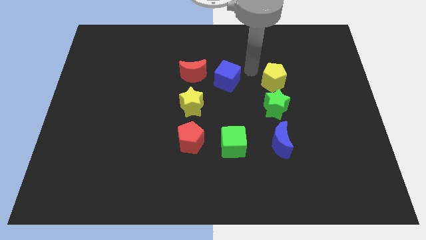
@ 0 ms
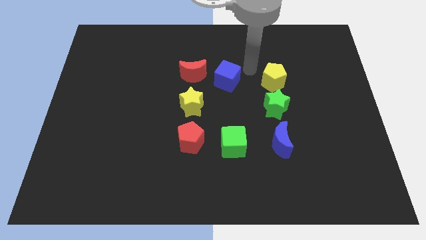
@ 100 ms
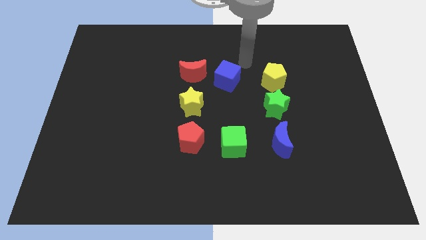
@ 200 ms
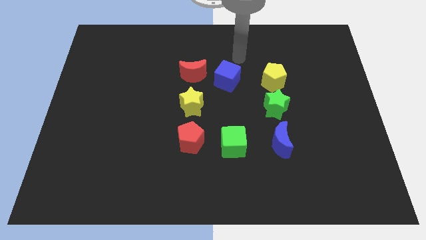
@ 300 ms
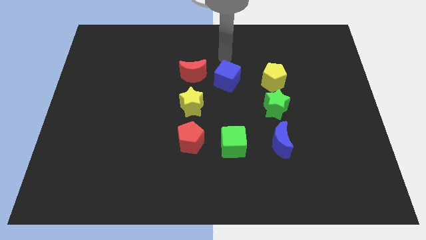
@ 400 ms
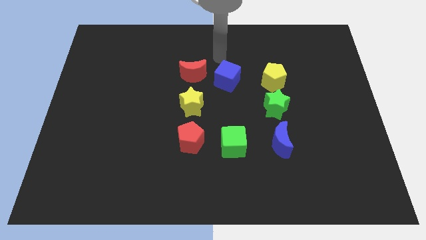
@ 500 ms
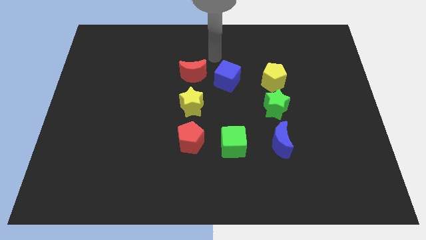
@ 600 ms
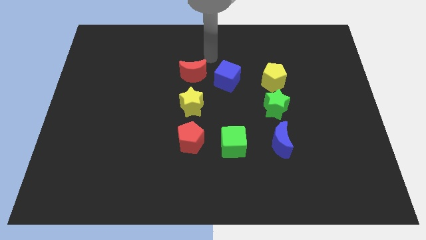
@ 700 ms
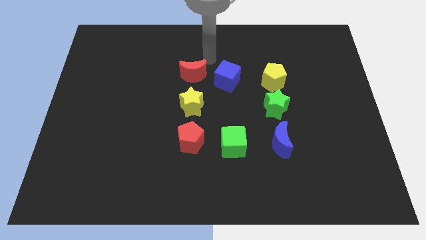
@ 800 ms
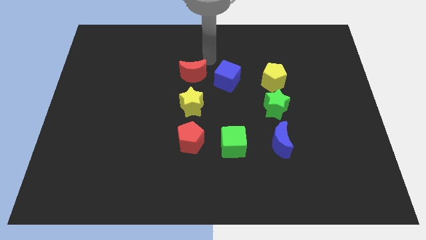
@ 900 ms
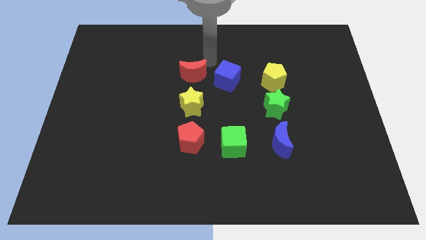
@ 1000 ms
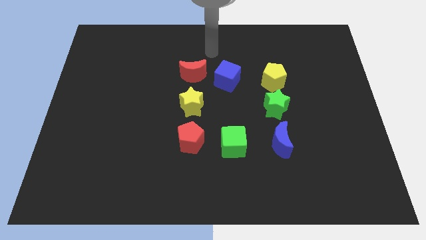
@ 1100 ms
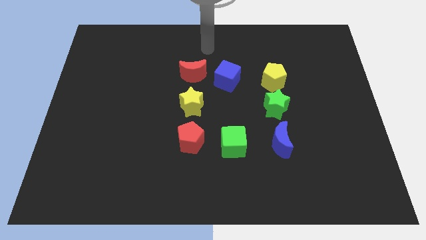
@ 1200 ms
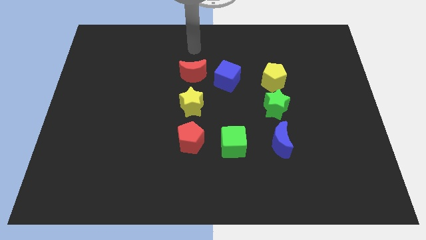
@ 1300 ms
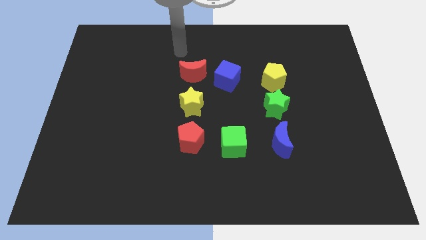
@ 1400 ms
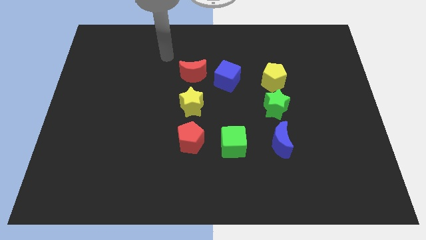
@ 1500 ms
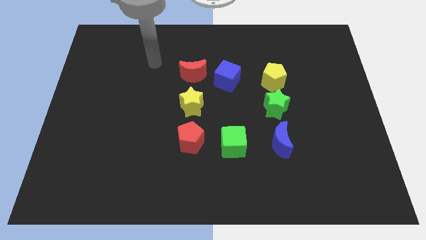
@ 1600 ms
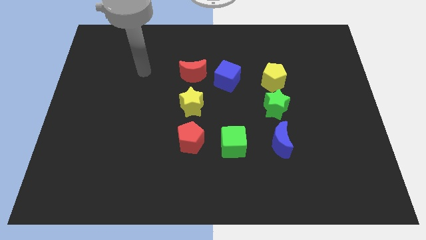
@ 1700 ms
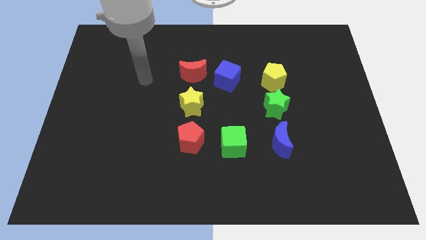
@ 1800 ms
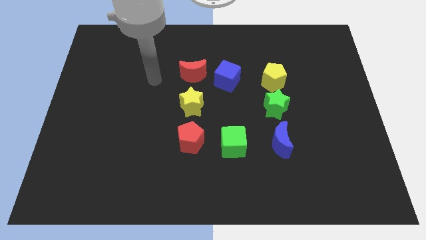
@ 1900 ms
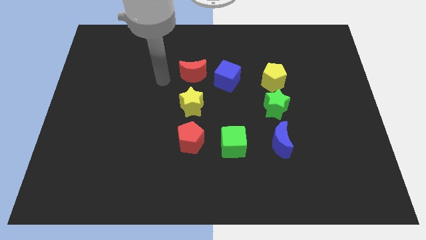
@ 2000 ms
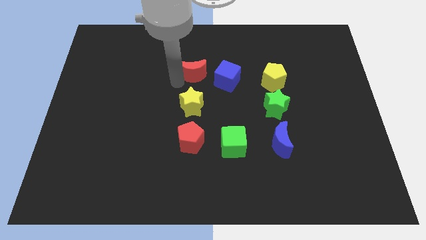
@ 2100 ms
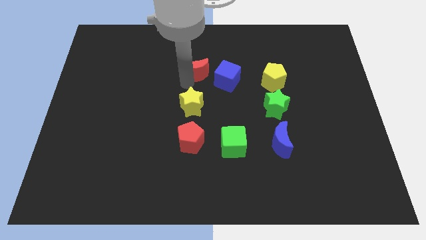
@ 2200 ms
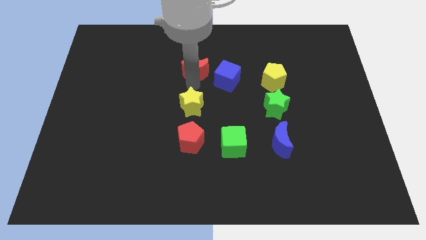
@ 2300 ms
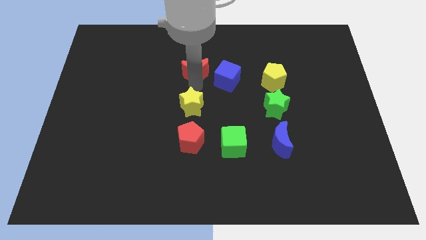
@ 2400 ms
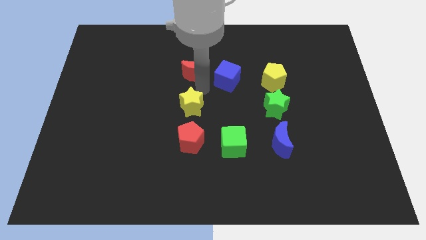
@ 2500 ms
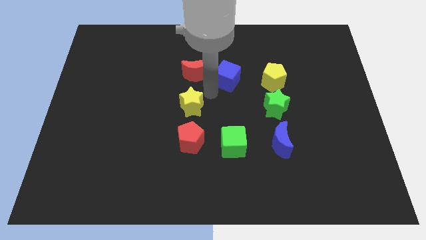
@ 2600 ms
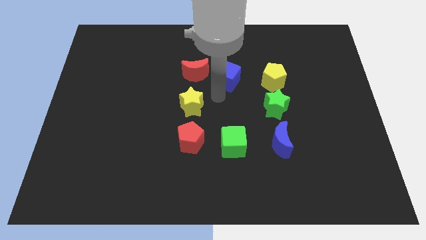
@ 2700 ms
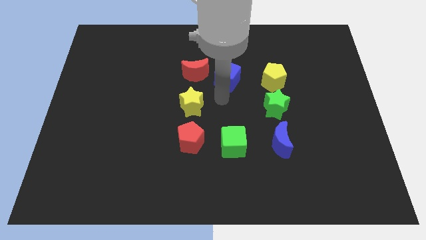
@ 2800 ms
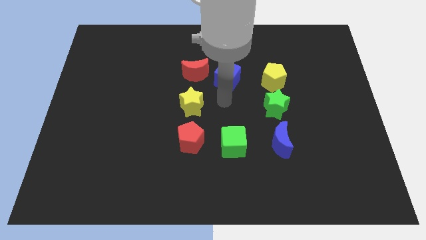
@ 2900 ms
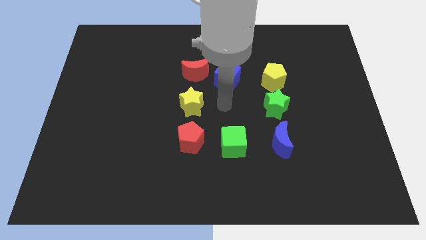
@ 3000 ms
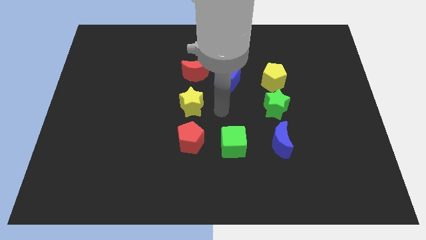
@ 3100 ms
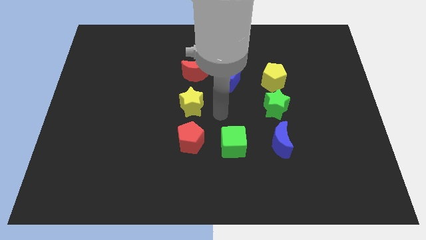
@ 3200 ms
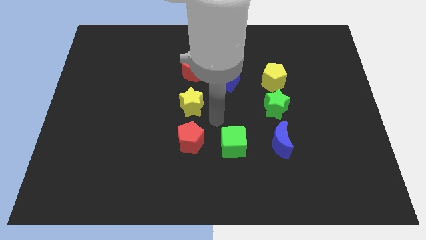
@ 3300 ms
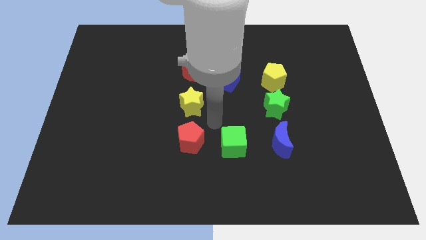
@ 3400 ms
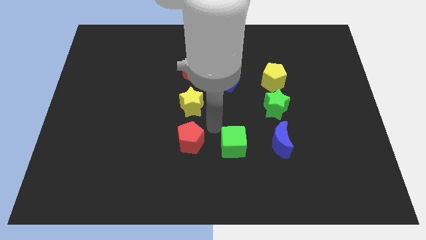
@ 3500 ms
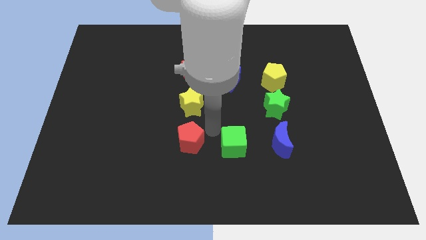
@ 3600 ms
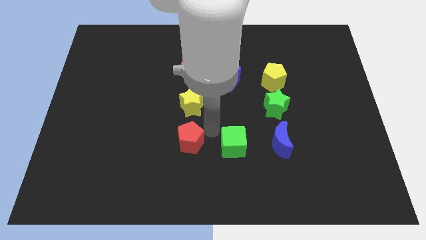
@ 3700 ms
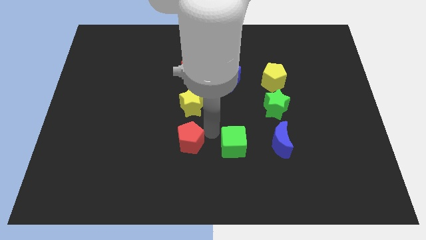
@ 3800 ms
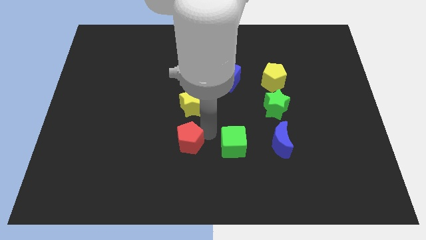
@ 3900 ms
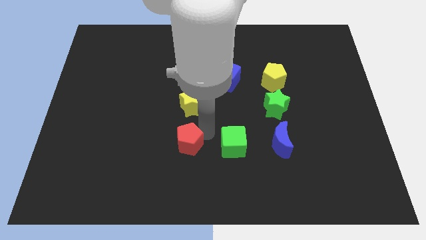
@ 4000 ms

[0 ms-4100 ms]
tap the top right side of the red pentagon

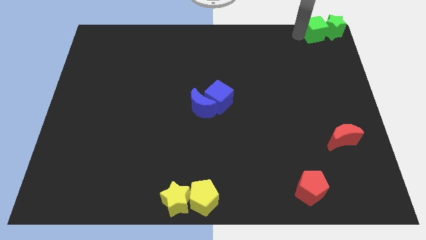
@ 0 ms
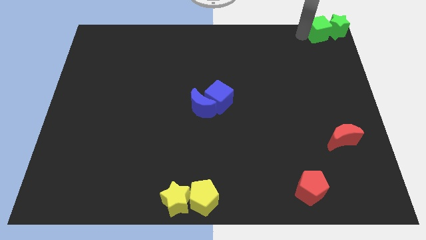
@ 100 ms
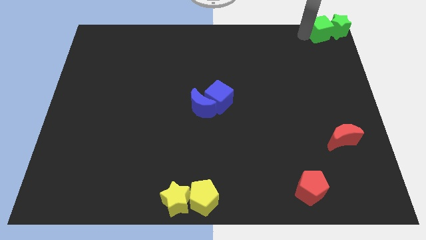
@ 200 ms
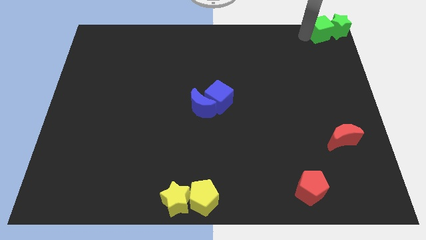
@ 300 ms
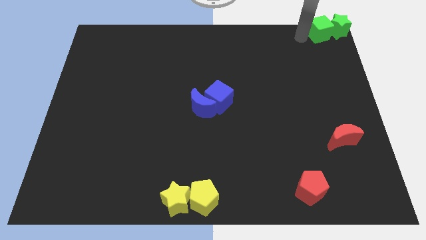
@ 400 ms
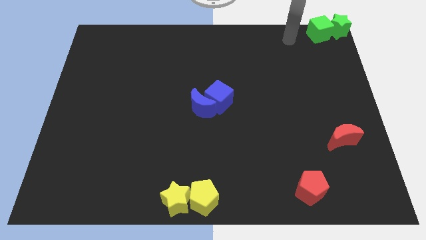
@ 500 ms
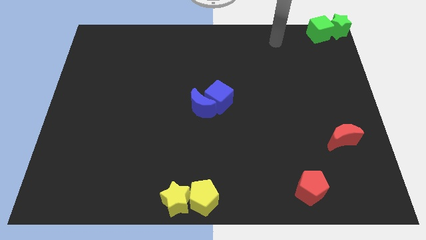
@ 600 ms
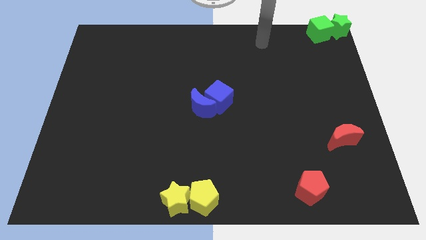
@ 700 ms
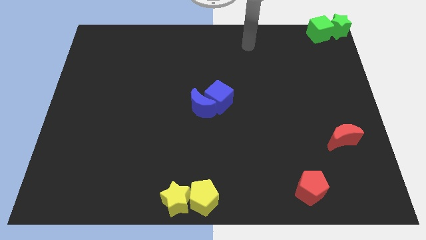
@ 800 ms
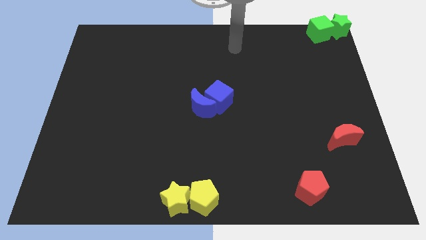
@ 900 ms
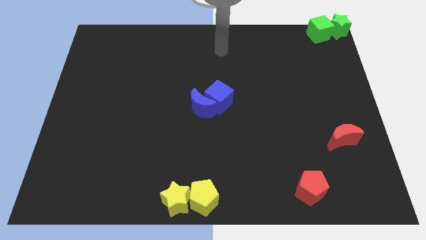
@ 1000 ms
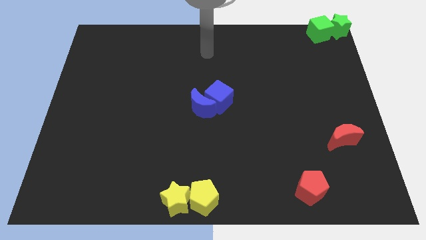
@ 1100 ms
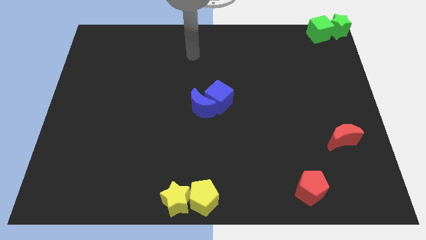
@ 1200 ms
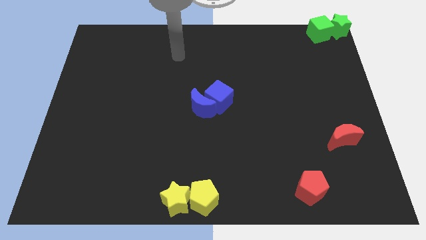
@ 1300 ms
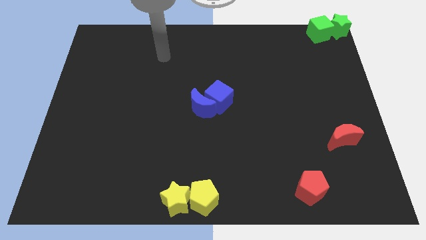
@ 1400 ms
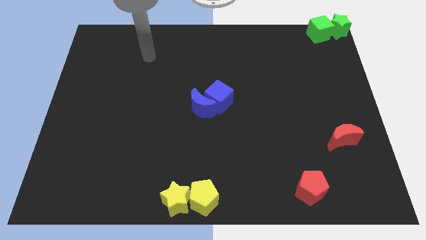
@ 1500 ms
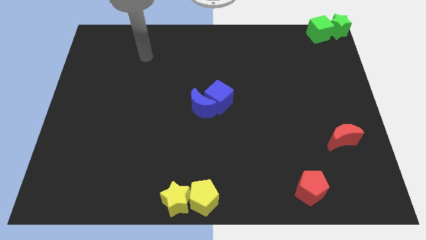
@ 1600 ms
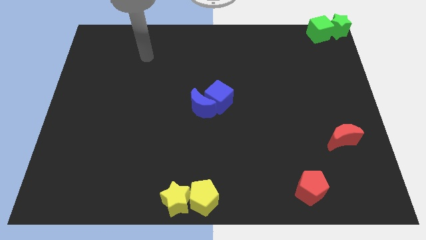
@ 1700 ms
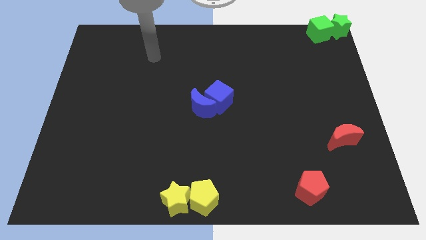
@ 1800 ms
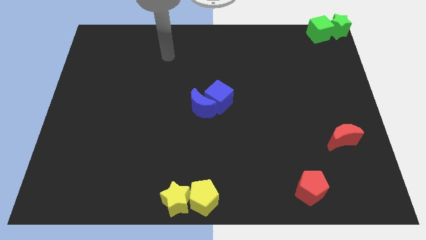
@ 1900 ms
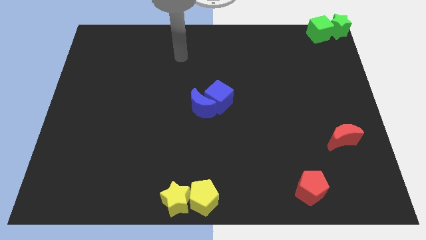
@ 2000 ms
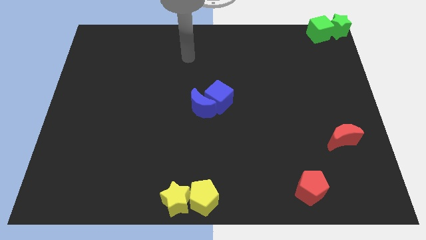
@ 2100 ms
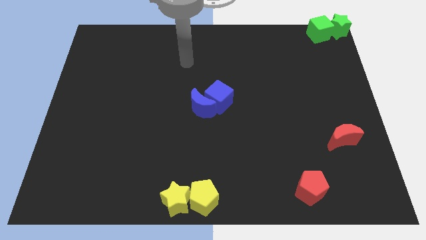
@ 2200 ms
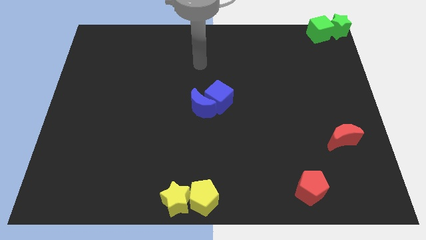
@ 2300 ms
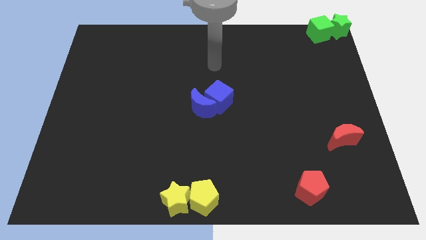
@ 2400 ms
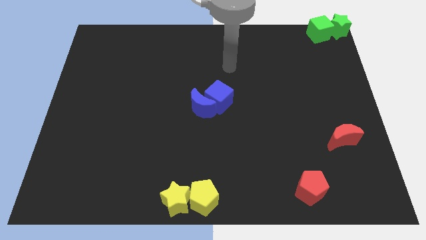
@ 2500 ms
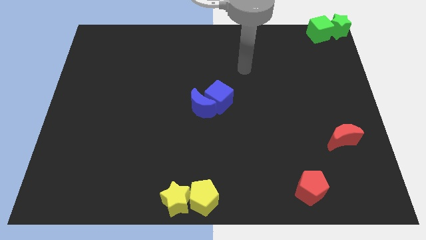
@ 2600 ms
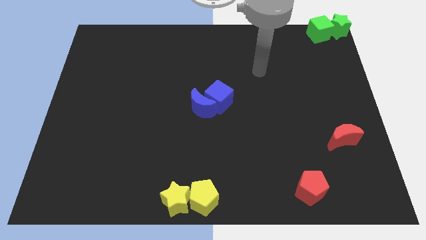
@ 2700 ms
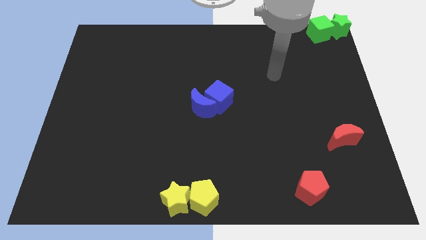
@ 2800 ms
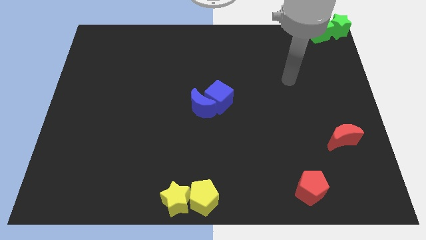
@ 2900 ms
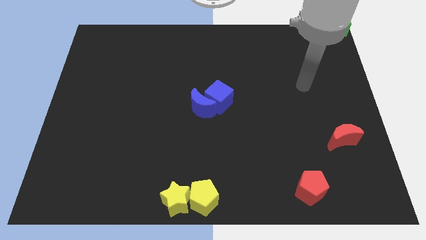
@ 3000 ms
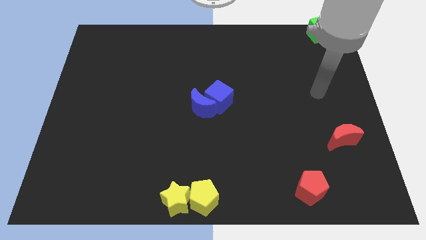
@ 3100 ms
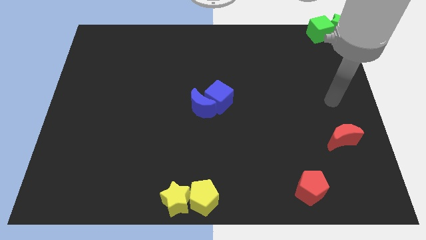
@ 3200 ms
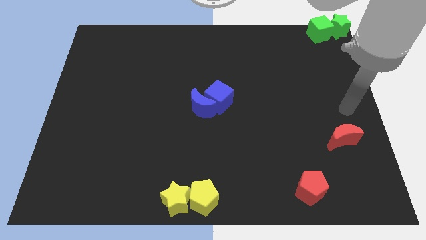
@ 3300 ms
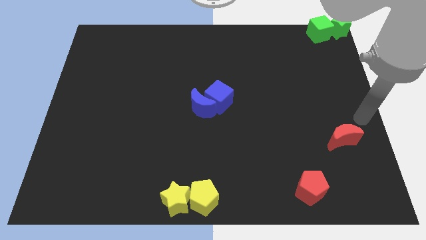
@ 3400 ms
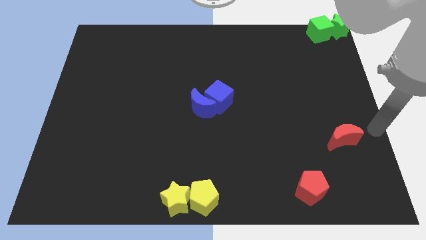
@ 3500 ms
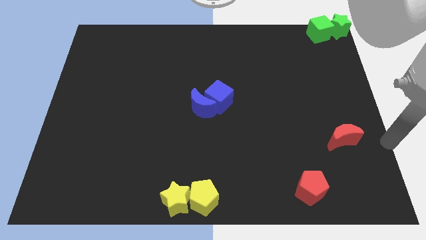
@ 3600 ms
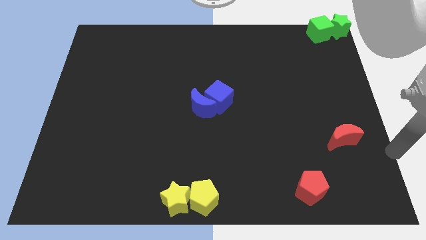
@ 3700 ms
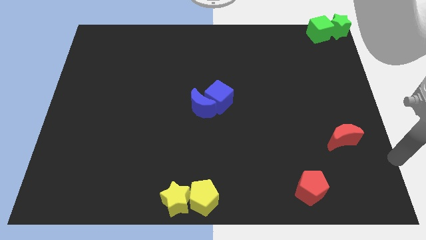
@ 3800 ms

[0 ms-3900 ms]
move the arm right to the red crescent

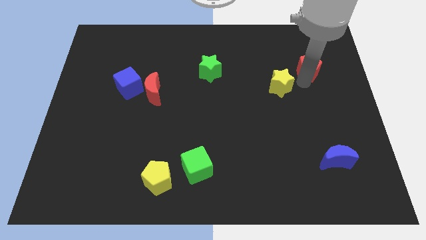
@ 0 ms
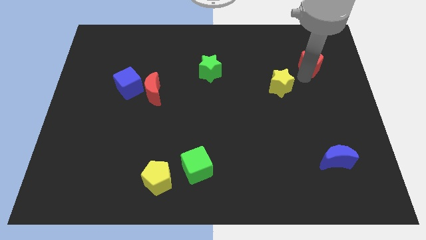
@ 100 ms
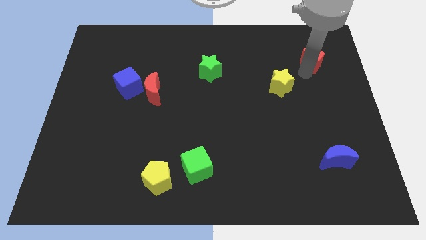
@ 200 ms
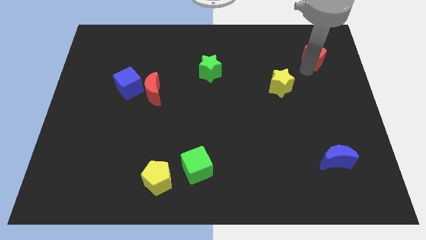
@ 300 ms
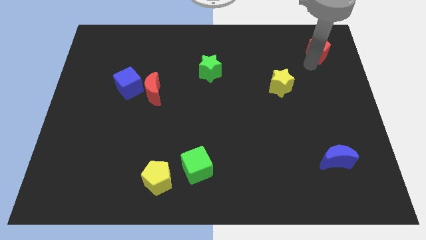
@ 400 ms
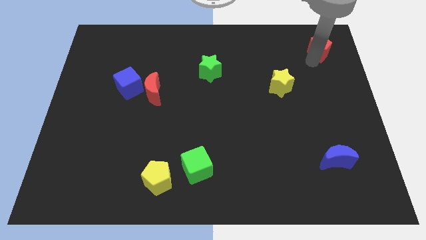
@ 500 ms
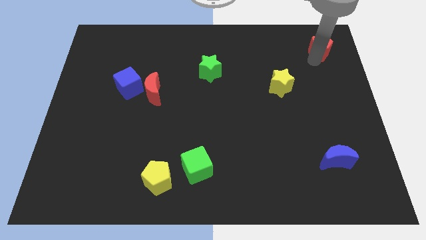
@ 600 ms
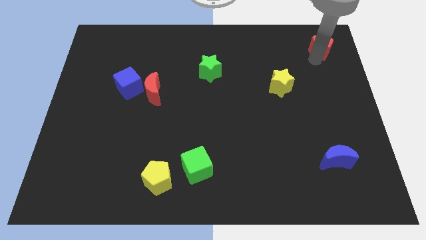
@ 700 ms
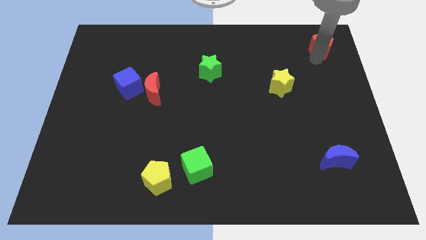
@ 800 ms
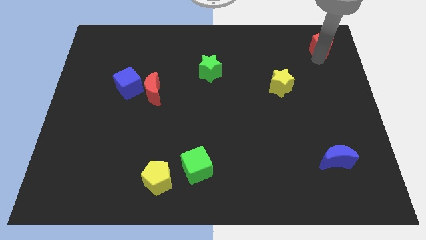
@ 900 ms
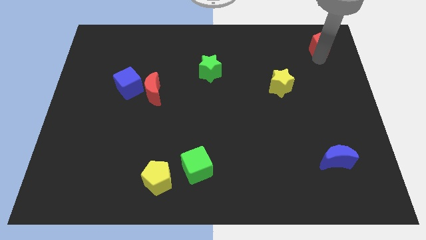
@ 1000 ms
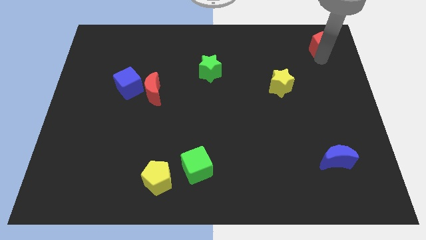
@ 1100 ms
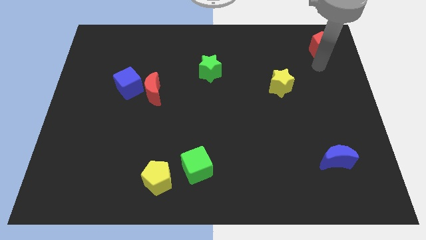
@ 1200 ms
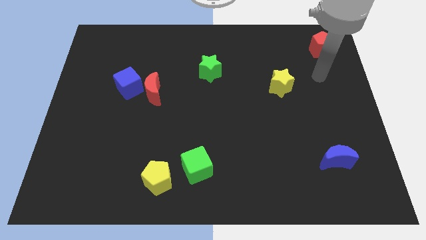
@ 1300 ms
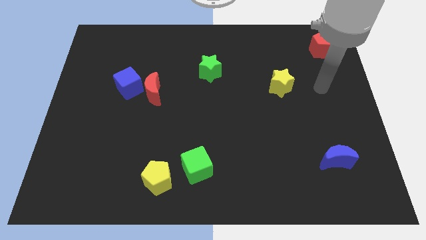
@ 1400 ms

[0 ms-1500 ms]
move the red pentagon to the top right of the board
